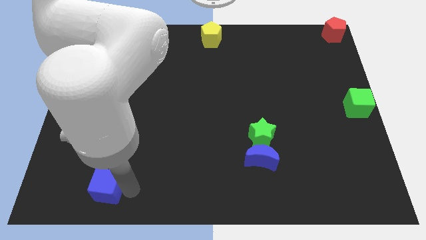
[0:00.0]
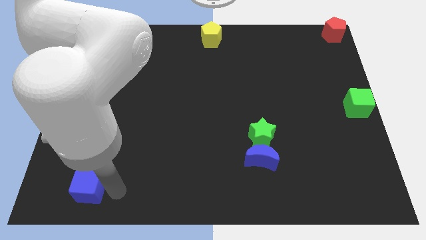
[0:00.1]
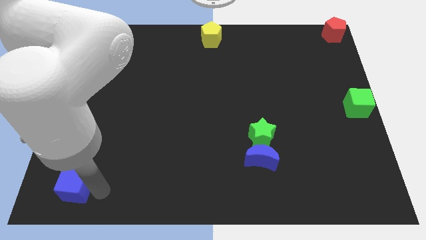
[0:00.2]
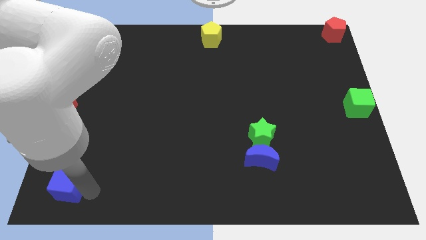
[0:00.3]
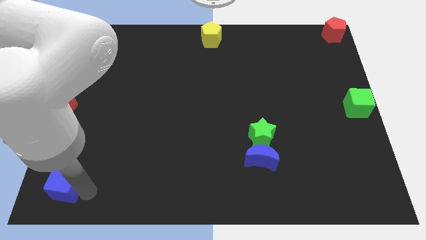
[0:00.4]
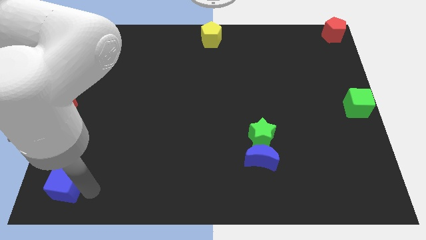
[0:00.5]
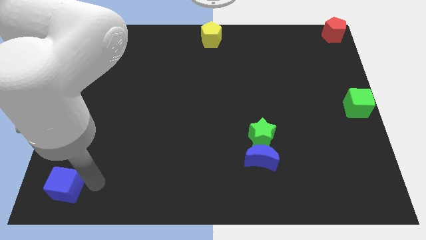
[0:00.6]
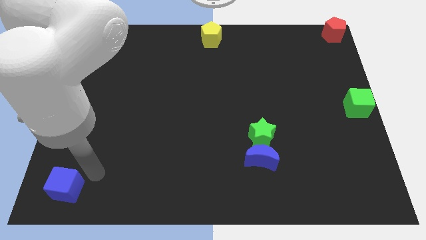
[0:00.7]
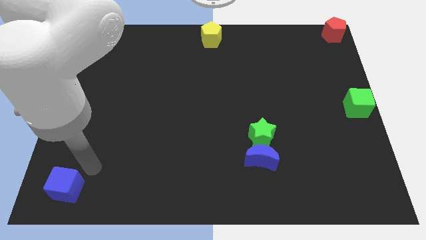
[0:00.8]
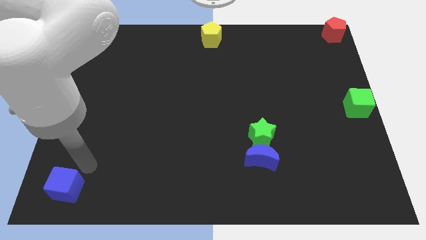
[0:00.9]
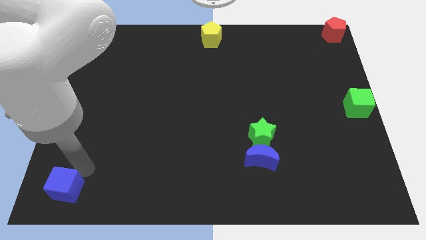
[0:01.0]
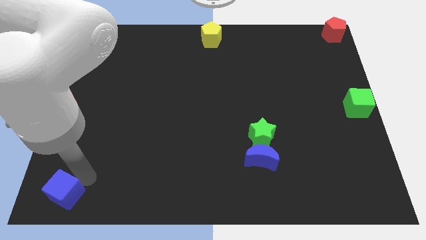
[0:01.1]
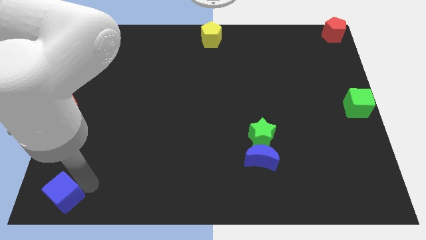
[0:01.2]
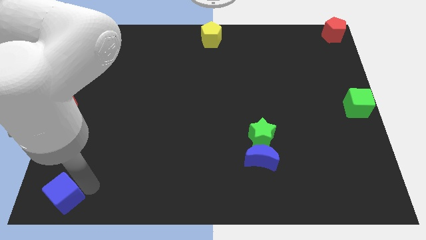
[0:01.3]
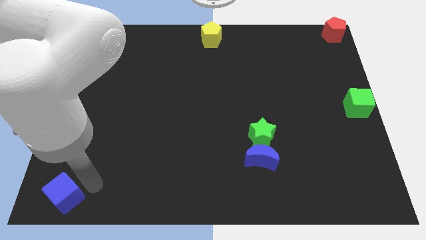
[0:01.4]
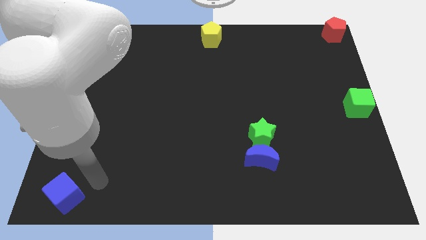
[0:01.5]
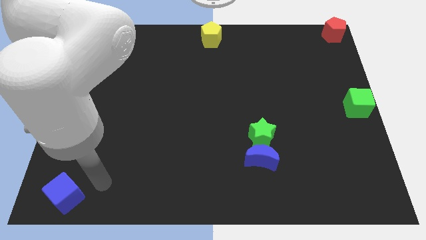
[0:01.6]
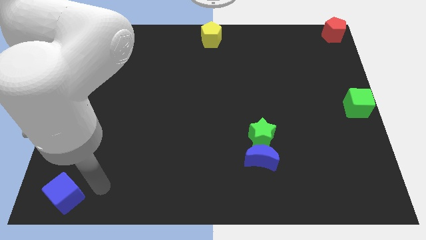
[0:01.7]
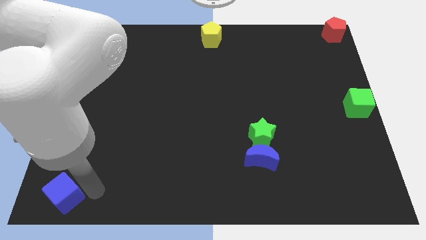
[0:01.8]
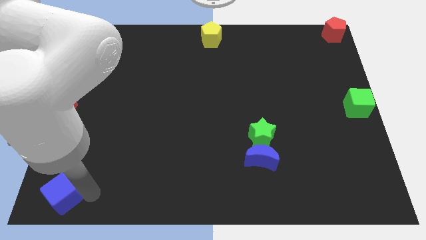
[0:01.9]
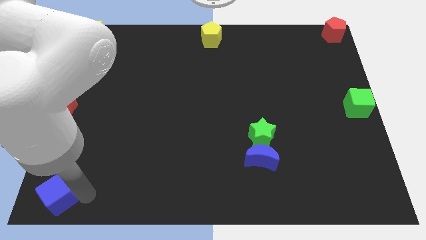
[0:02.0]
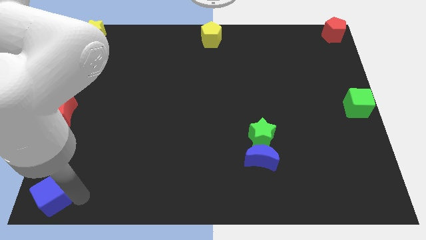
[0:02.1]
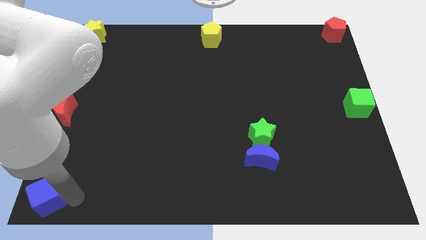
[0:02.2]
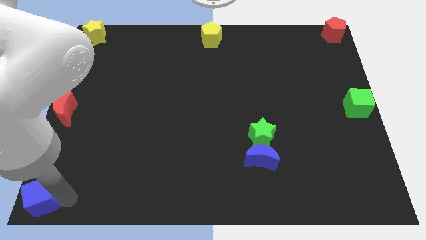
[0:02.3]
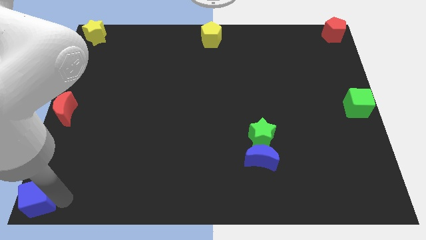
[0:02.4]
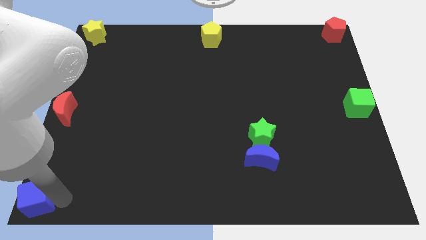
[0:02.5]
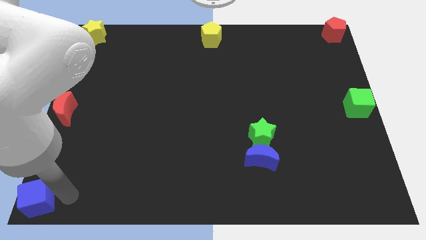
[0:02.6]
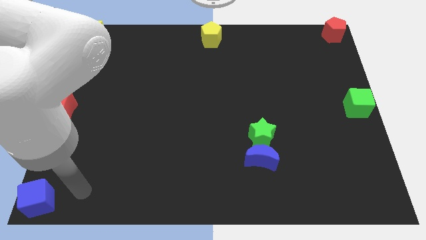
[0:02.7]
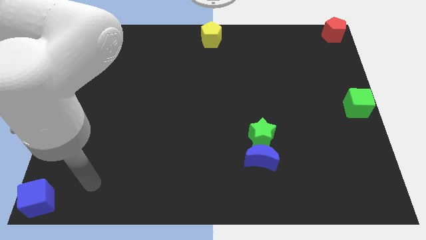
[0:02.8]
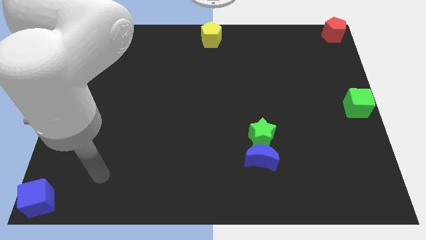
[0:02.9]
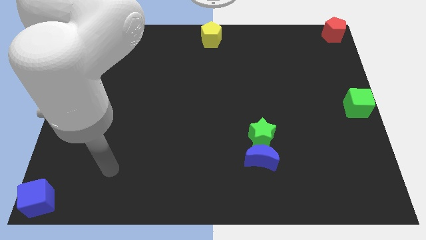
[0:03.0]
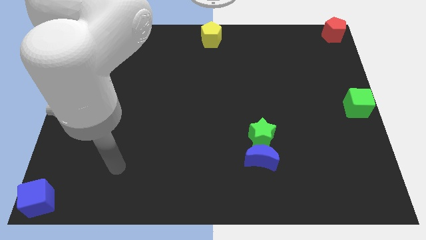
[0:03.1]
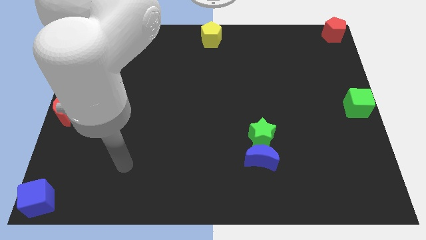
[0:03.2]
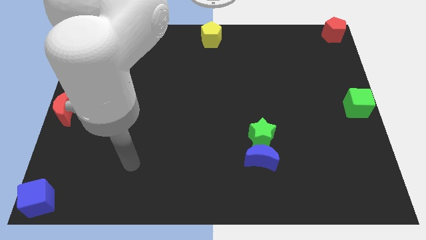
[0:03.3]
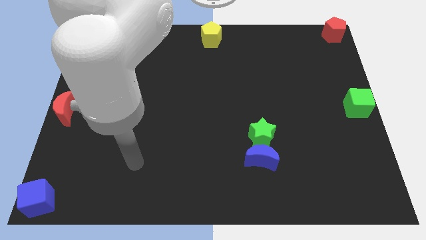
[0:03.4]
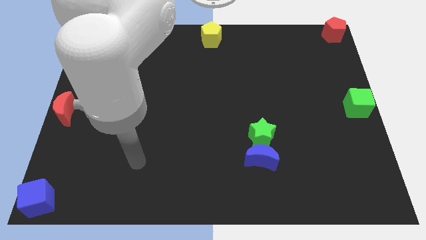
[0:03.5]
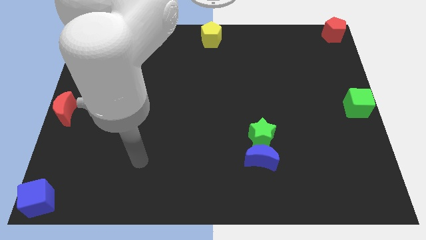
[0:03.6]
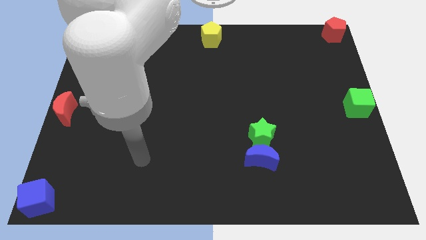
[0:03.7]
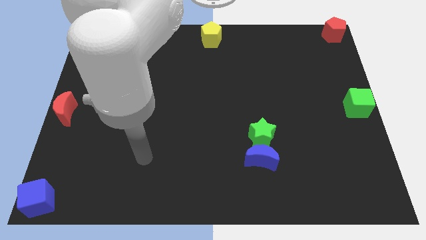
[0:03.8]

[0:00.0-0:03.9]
move the blue cube to the bottom left corner of the board

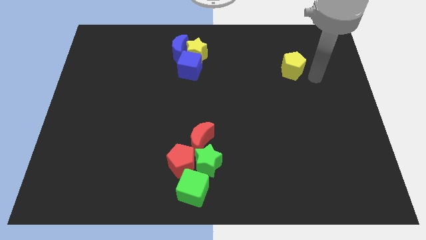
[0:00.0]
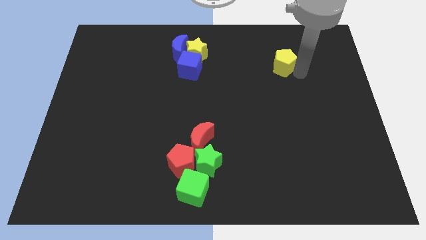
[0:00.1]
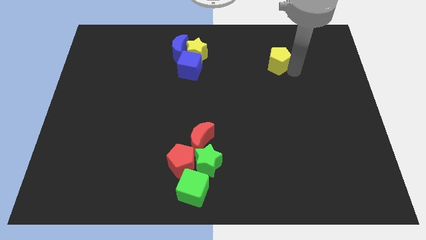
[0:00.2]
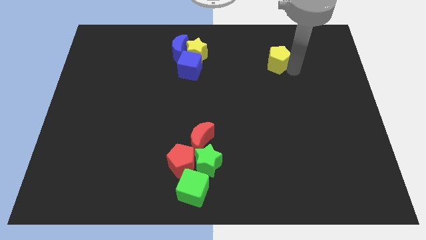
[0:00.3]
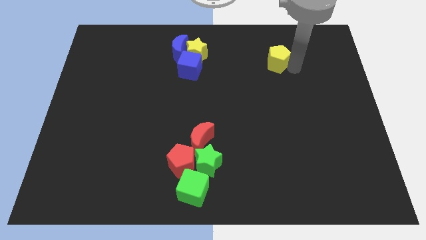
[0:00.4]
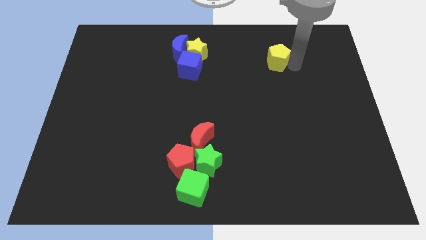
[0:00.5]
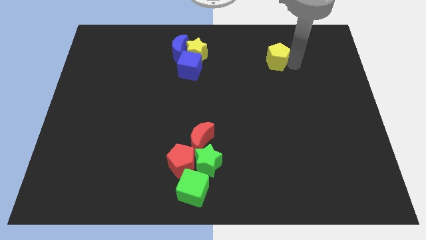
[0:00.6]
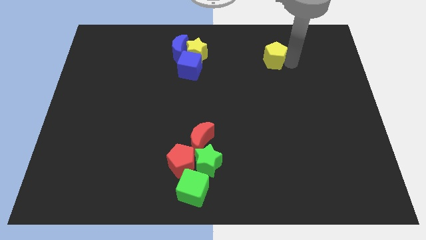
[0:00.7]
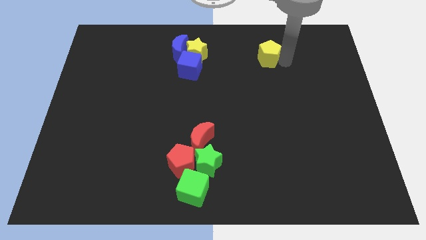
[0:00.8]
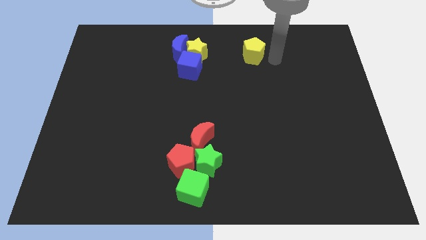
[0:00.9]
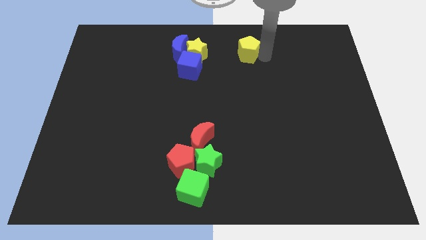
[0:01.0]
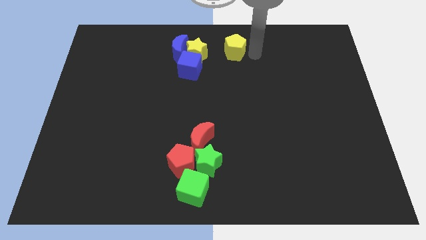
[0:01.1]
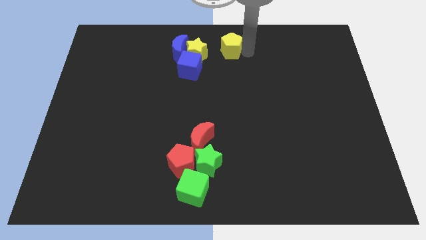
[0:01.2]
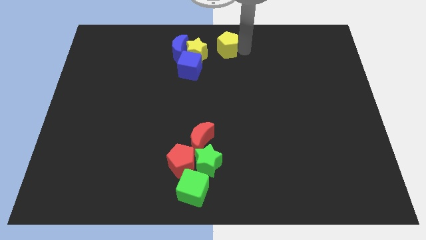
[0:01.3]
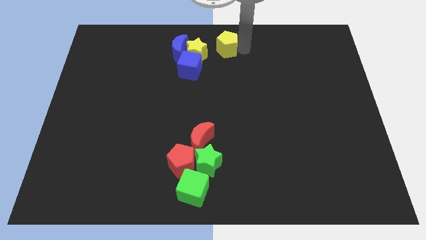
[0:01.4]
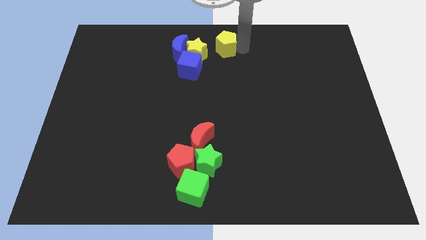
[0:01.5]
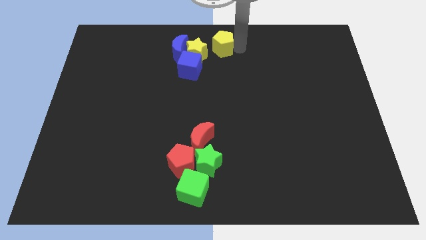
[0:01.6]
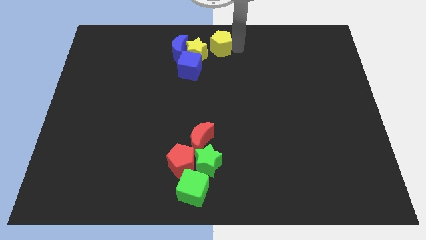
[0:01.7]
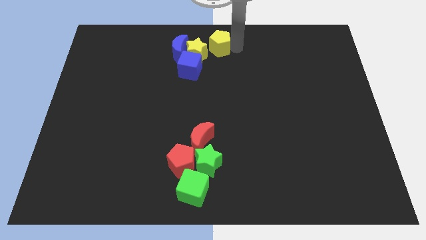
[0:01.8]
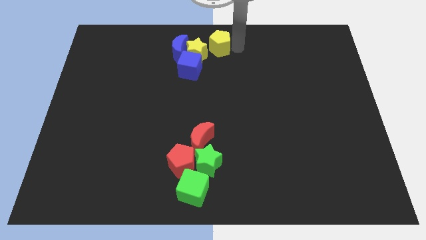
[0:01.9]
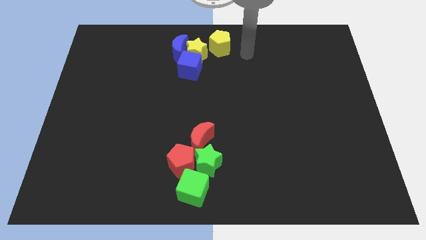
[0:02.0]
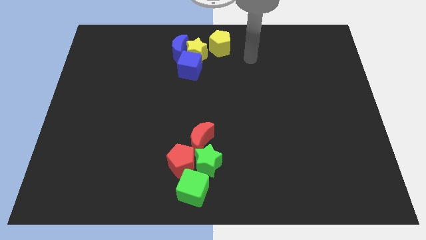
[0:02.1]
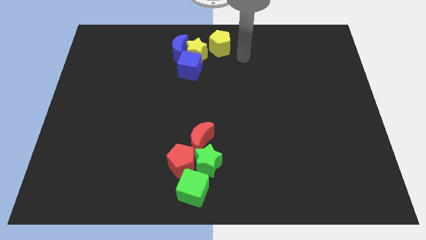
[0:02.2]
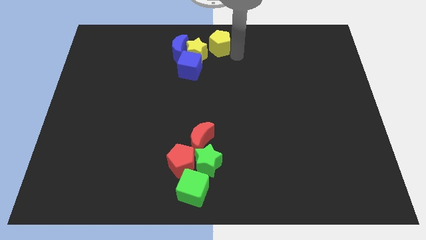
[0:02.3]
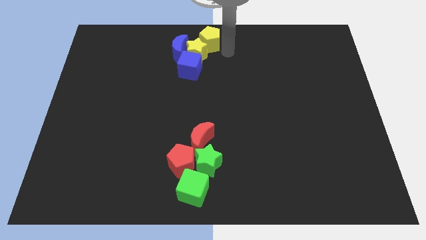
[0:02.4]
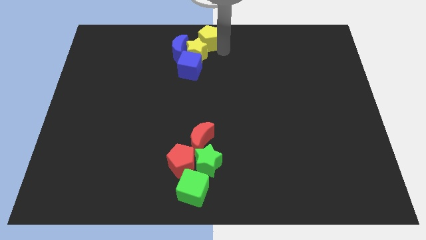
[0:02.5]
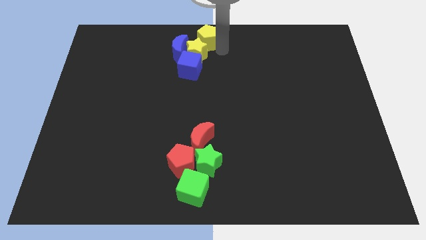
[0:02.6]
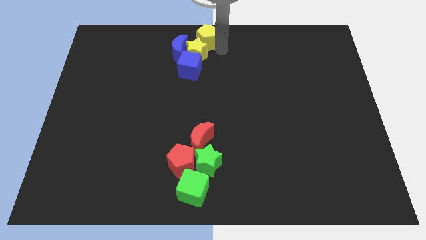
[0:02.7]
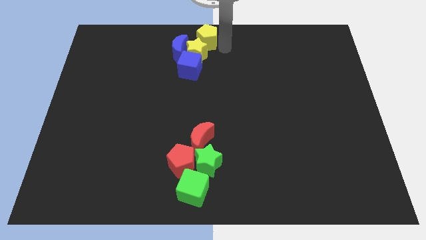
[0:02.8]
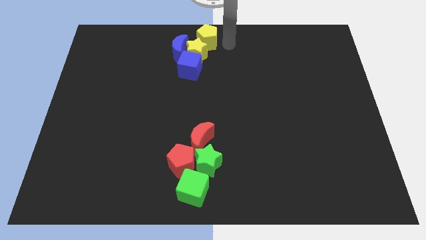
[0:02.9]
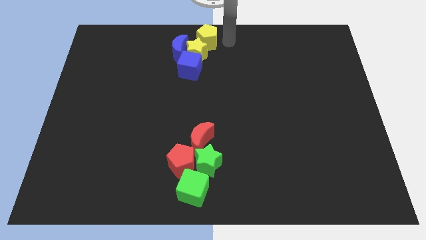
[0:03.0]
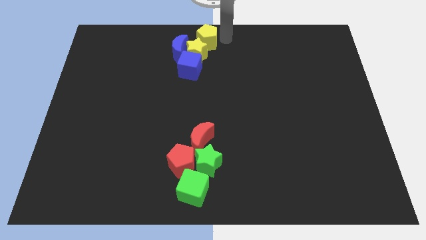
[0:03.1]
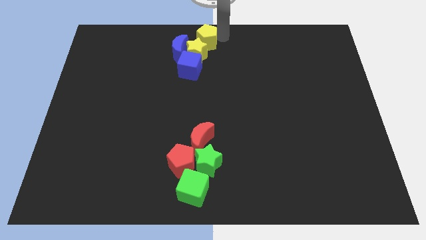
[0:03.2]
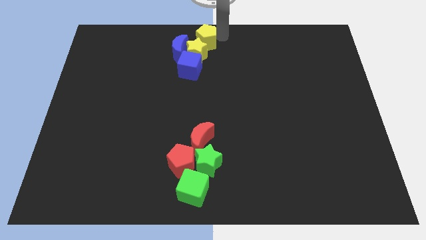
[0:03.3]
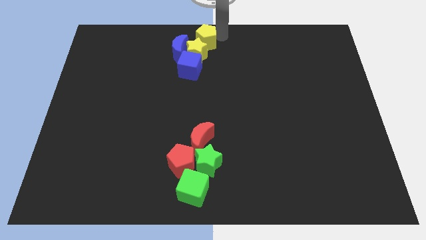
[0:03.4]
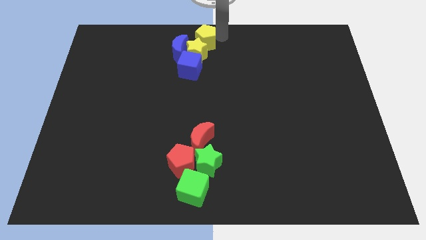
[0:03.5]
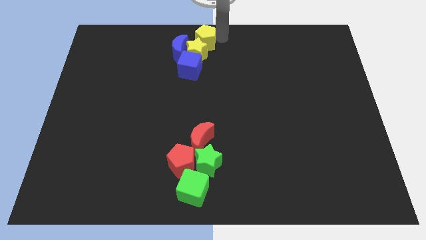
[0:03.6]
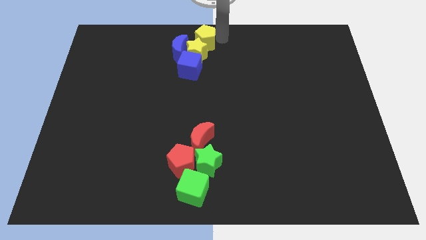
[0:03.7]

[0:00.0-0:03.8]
place the yellow pentagon on top of the yellow star to form a diagonal line

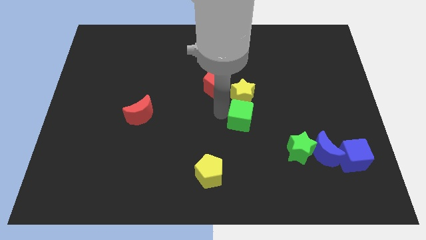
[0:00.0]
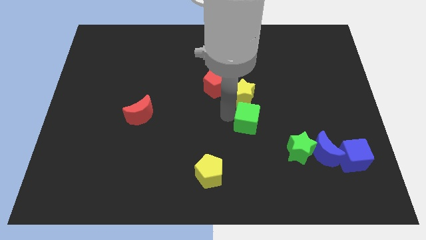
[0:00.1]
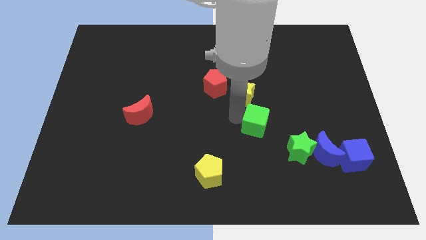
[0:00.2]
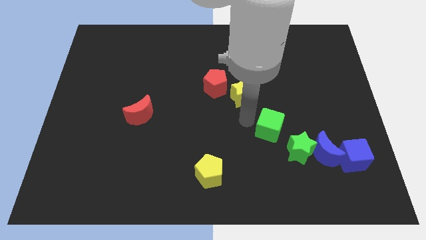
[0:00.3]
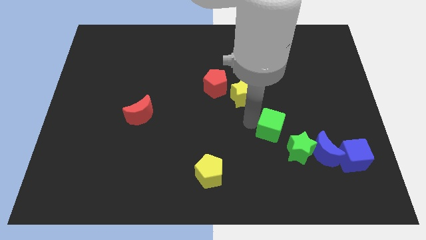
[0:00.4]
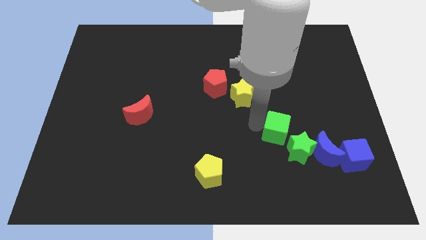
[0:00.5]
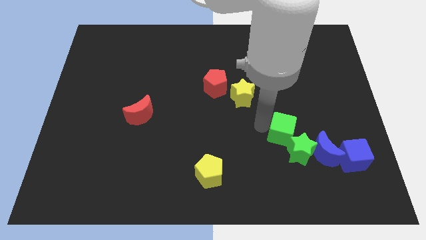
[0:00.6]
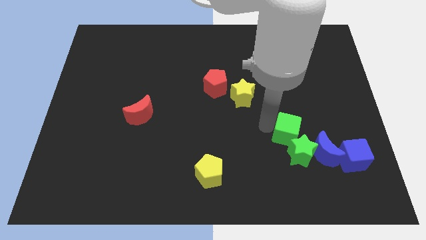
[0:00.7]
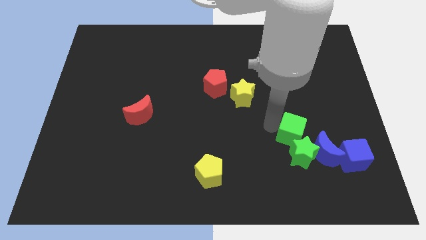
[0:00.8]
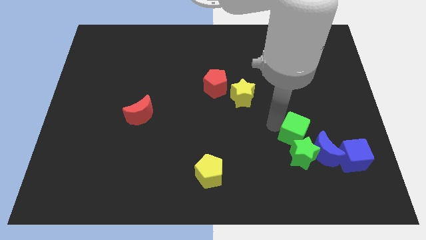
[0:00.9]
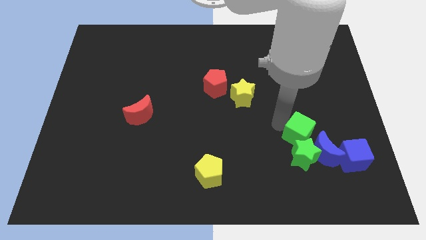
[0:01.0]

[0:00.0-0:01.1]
push the green cube in to the green star

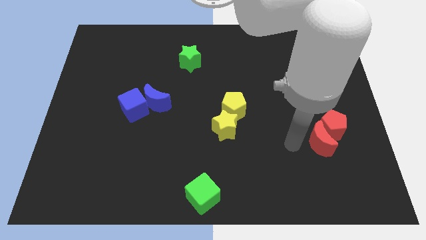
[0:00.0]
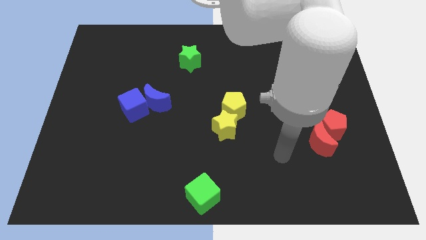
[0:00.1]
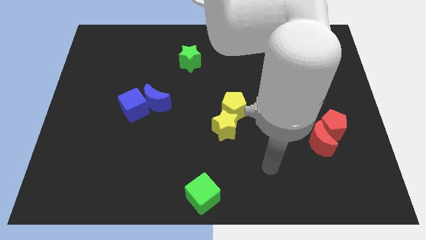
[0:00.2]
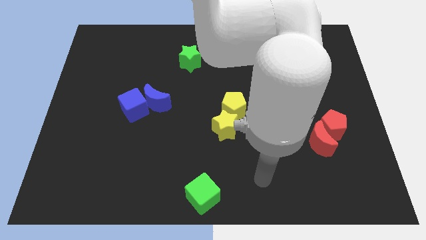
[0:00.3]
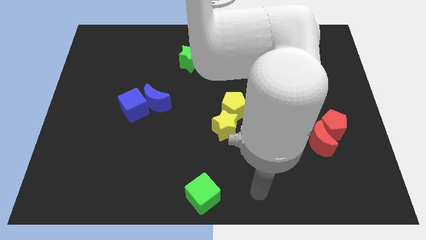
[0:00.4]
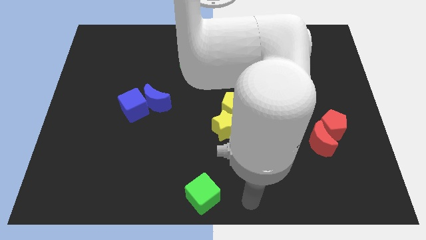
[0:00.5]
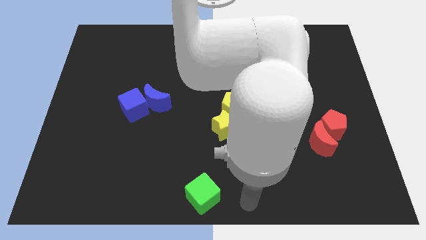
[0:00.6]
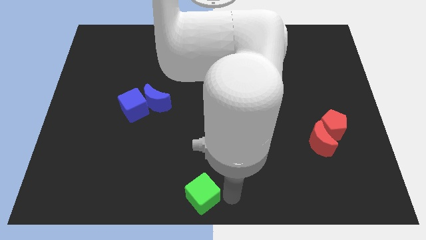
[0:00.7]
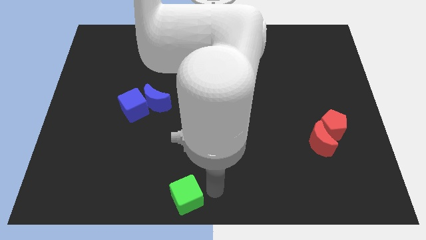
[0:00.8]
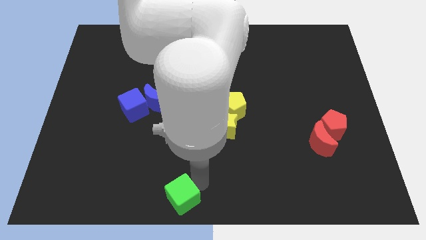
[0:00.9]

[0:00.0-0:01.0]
move green cube slightly left side of the board
